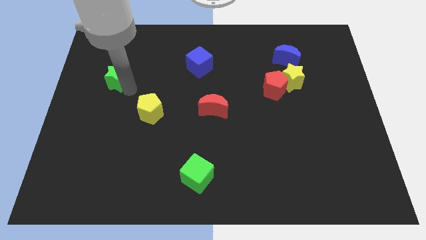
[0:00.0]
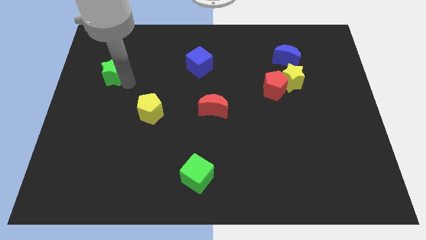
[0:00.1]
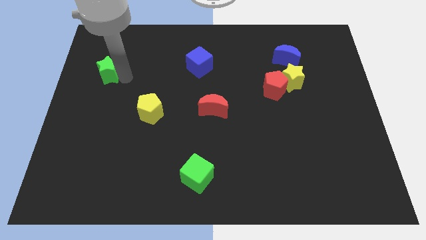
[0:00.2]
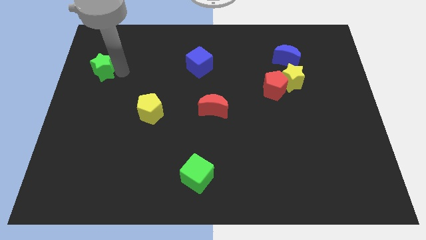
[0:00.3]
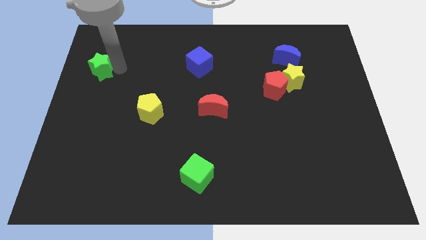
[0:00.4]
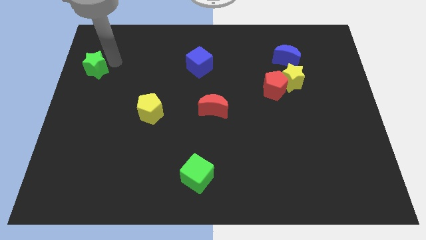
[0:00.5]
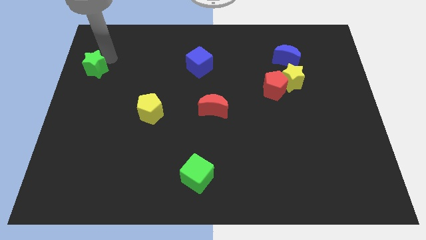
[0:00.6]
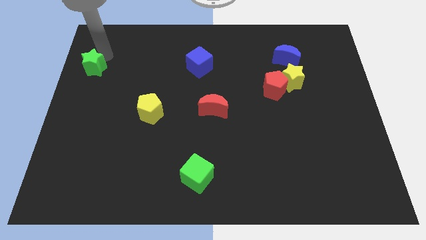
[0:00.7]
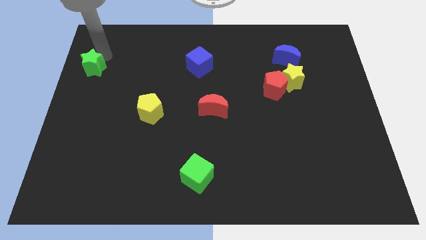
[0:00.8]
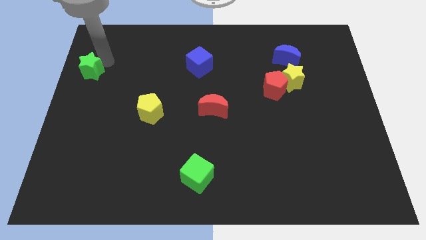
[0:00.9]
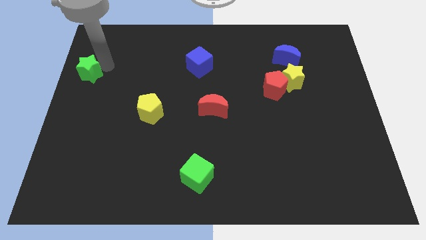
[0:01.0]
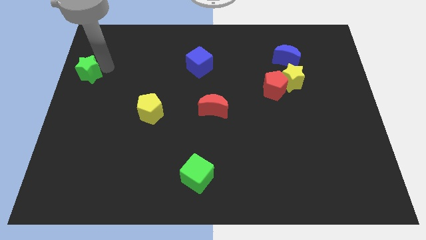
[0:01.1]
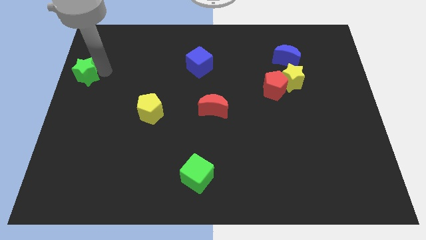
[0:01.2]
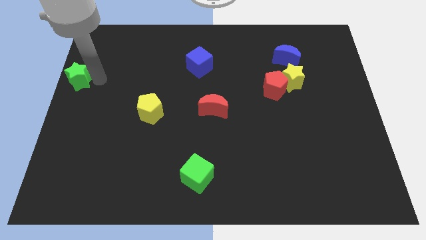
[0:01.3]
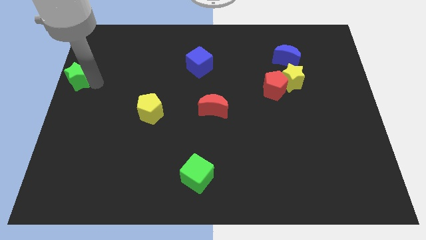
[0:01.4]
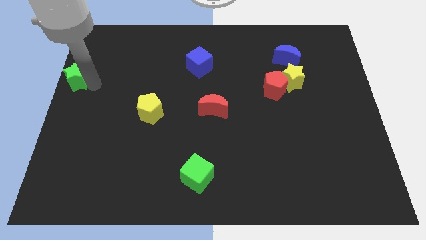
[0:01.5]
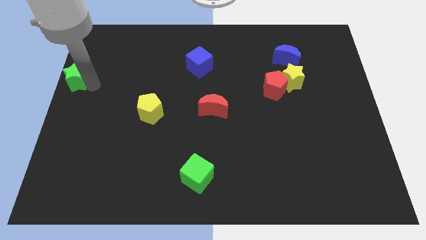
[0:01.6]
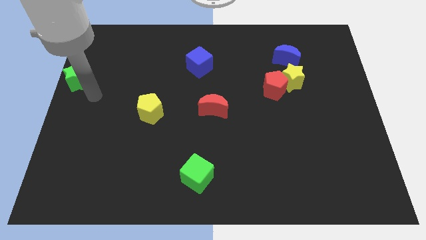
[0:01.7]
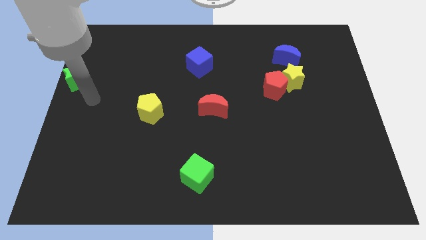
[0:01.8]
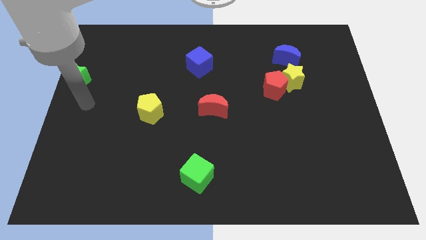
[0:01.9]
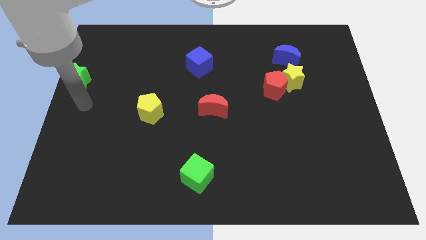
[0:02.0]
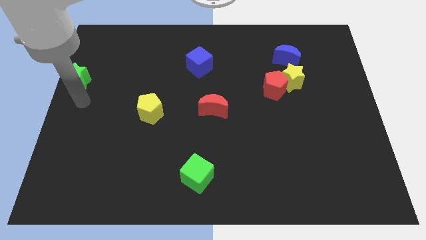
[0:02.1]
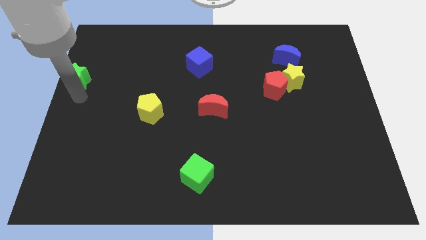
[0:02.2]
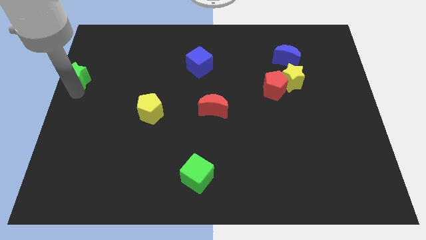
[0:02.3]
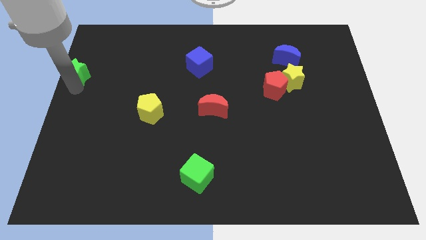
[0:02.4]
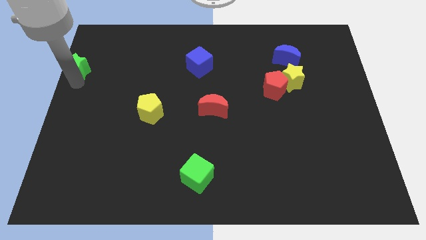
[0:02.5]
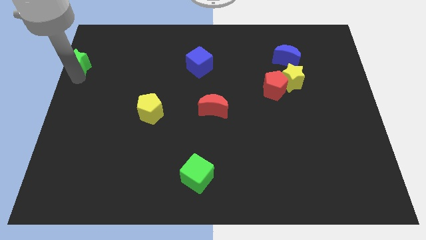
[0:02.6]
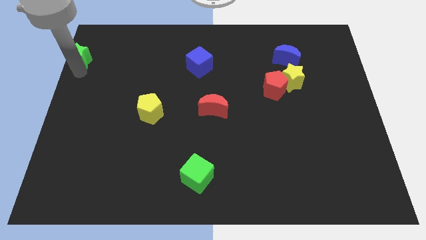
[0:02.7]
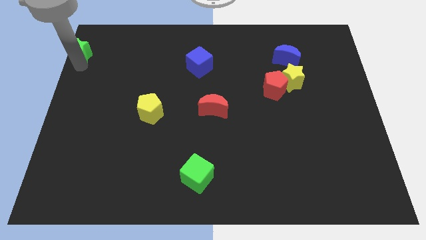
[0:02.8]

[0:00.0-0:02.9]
move green star towards the top of the board

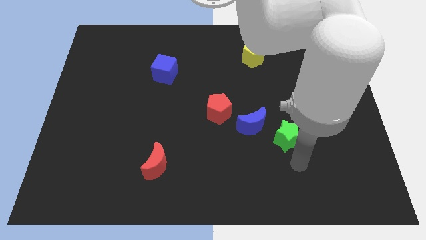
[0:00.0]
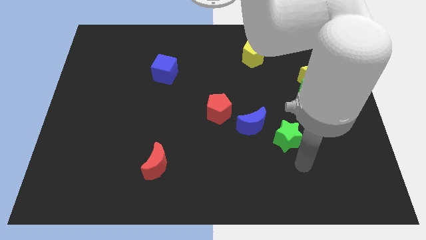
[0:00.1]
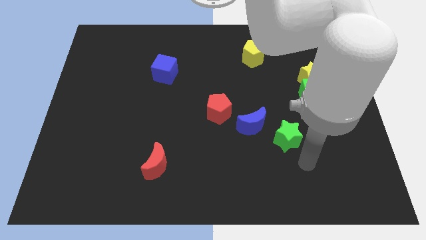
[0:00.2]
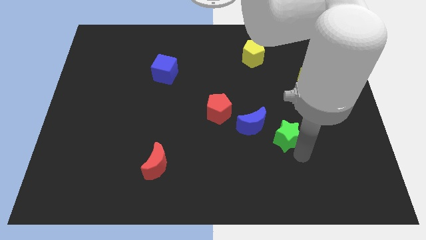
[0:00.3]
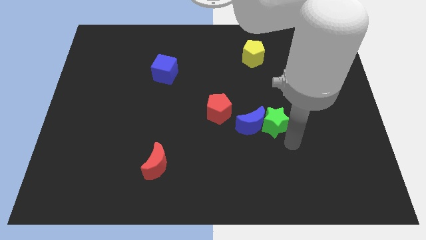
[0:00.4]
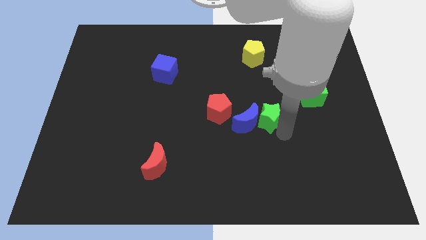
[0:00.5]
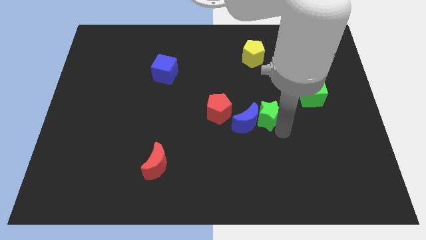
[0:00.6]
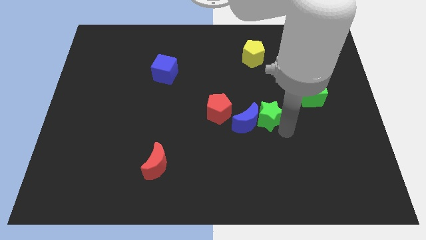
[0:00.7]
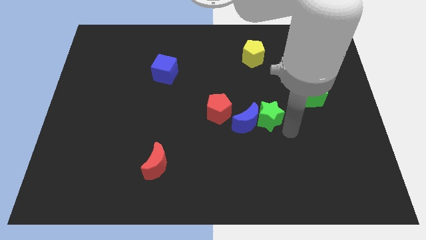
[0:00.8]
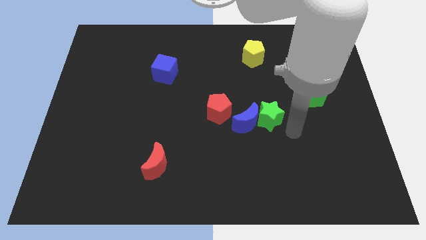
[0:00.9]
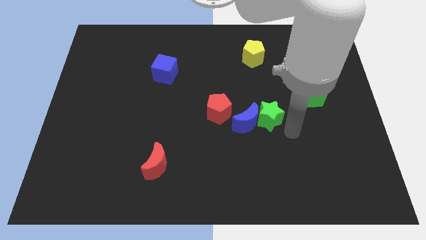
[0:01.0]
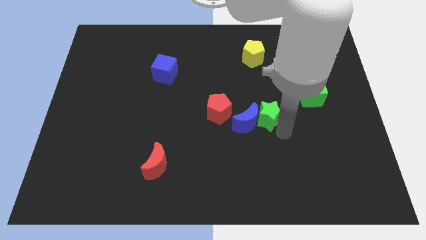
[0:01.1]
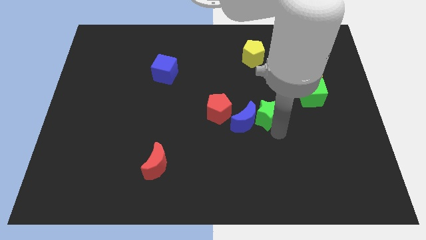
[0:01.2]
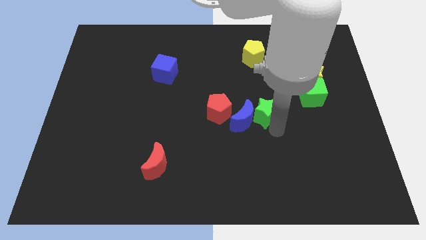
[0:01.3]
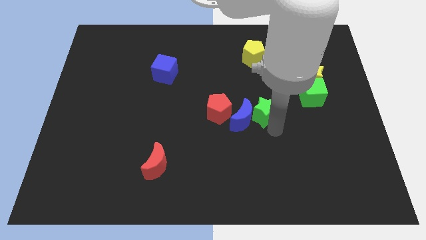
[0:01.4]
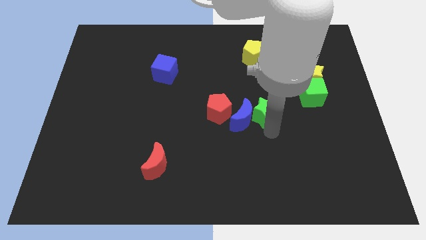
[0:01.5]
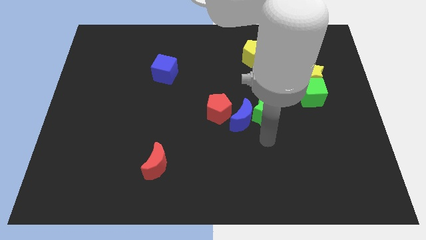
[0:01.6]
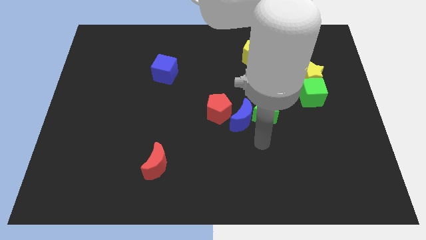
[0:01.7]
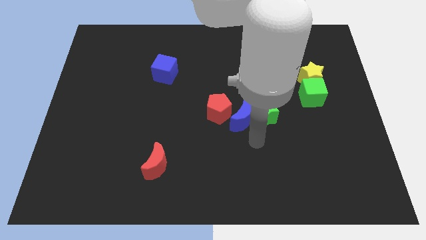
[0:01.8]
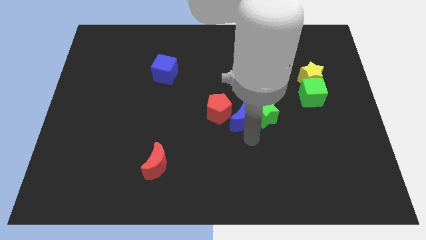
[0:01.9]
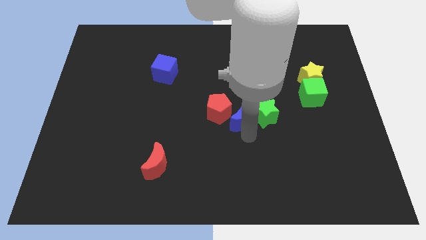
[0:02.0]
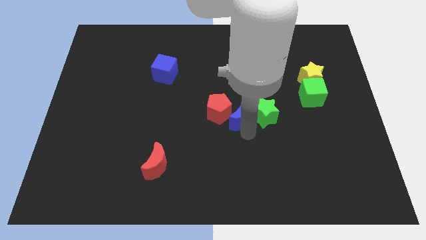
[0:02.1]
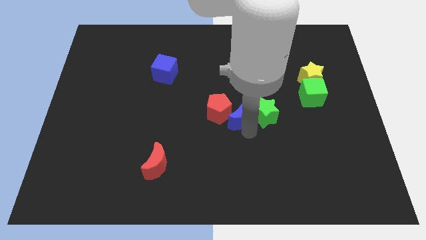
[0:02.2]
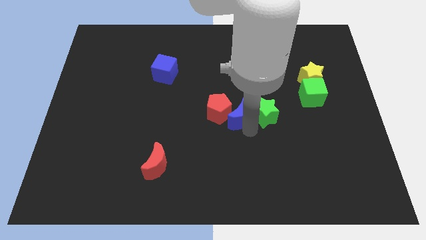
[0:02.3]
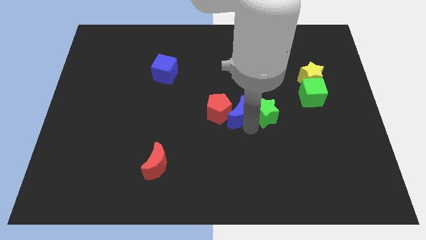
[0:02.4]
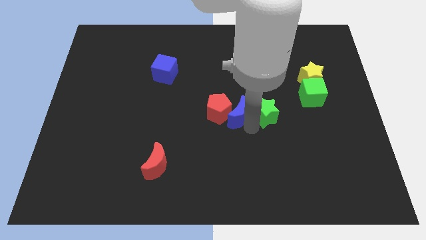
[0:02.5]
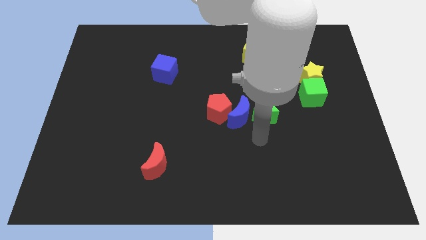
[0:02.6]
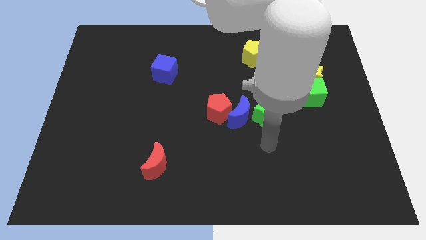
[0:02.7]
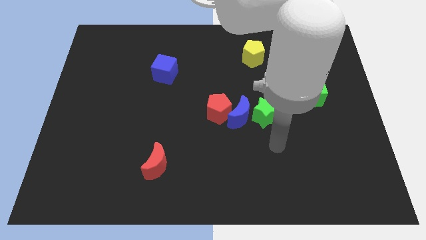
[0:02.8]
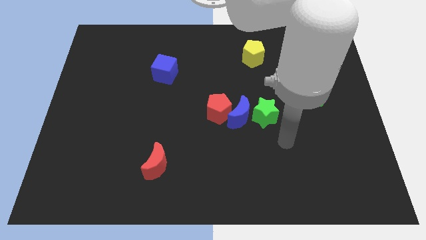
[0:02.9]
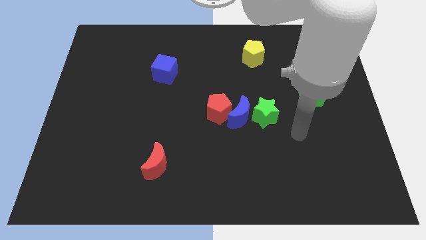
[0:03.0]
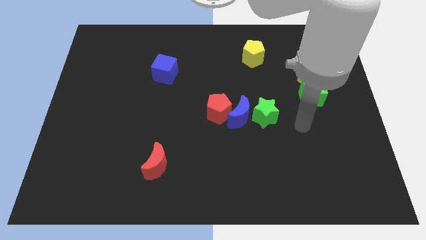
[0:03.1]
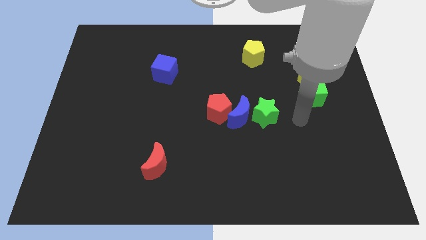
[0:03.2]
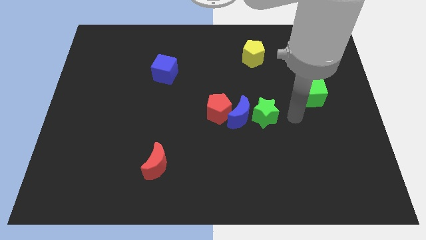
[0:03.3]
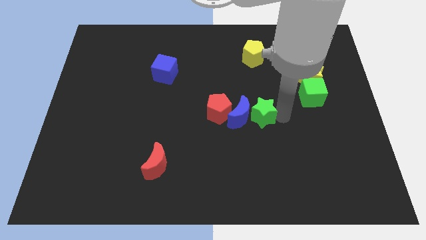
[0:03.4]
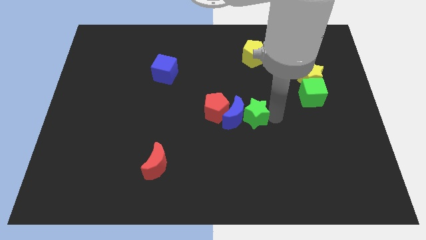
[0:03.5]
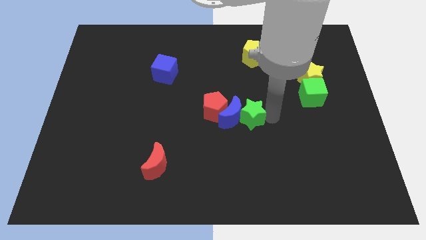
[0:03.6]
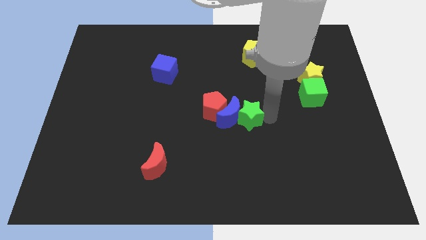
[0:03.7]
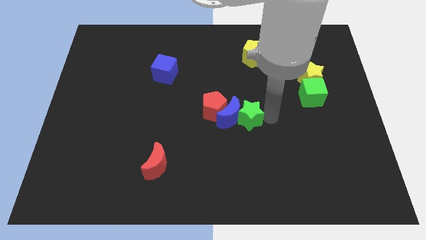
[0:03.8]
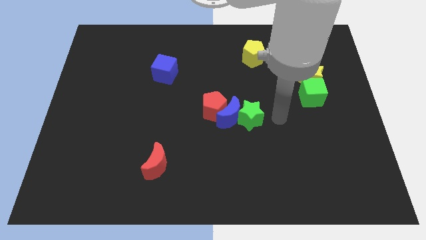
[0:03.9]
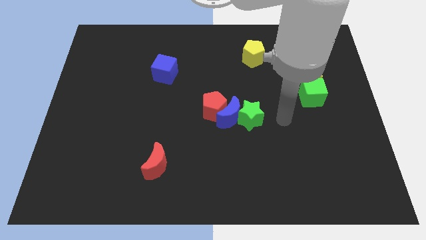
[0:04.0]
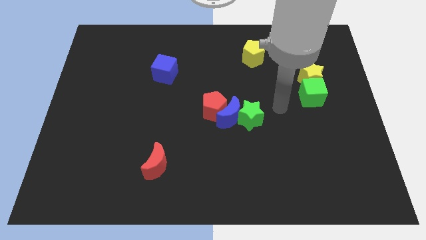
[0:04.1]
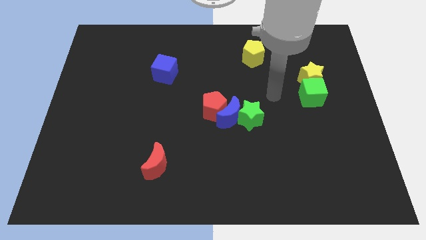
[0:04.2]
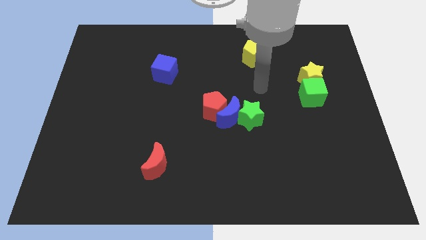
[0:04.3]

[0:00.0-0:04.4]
push the blue crescent into the red pentagon

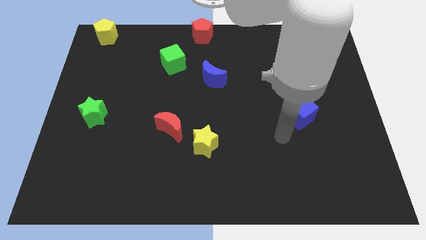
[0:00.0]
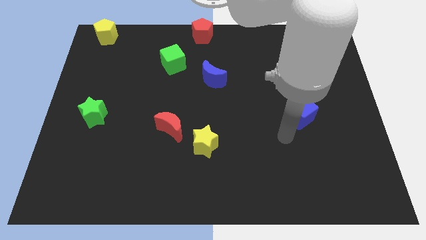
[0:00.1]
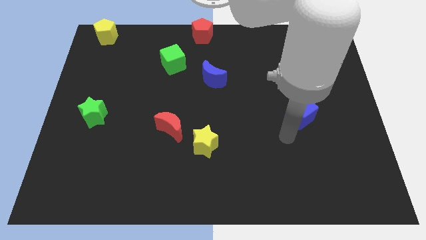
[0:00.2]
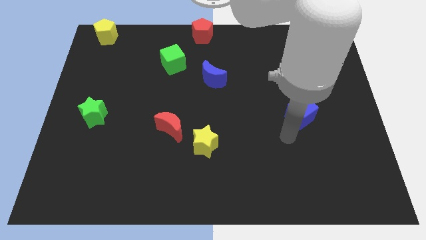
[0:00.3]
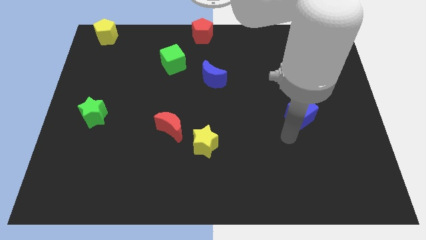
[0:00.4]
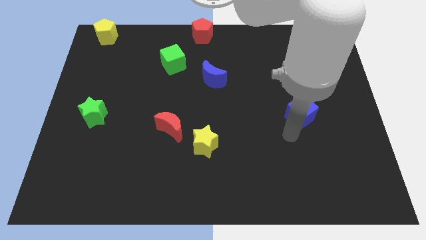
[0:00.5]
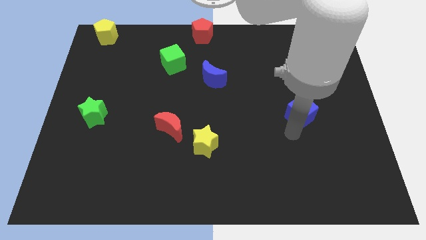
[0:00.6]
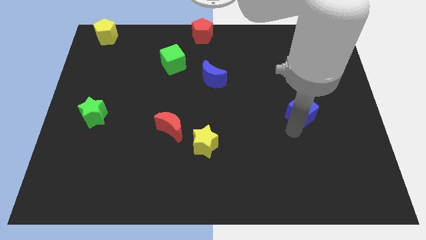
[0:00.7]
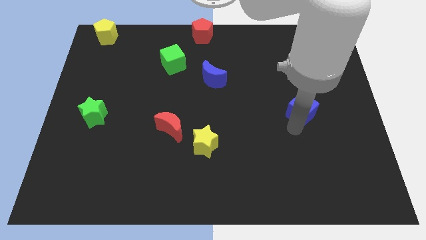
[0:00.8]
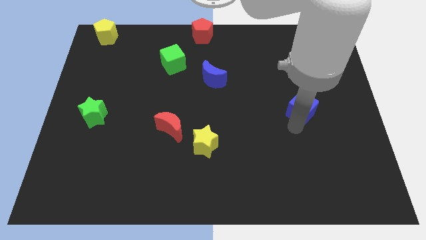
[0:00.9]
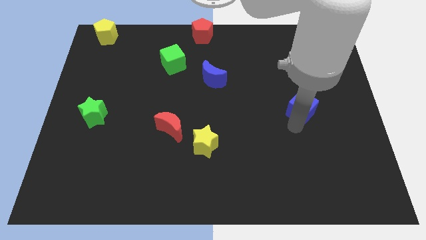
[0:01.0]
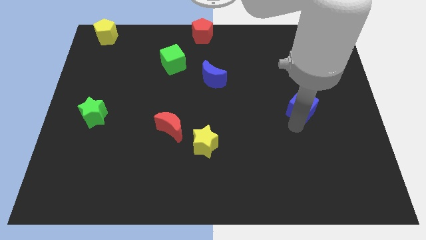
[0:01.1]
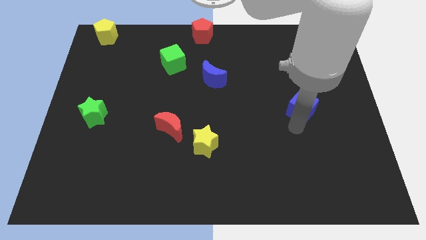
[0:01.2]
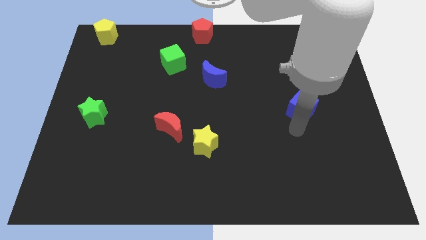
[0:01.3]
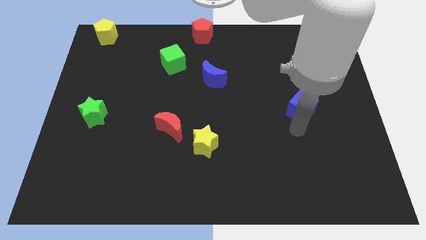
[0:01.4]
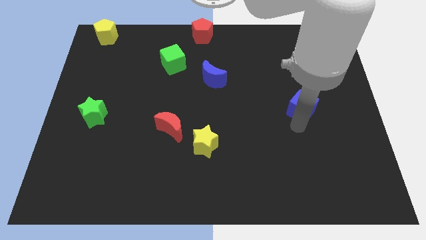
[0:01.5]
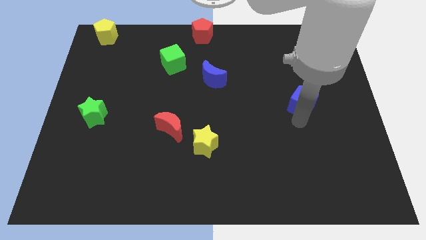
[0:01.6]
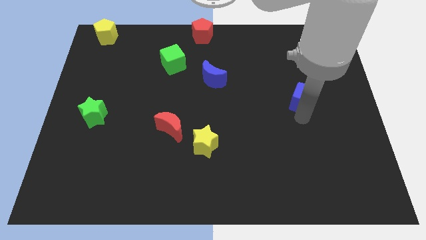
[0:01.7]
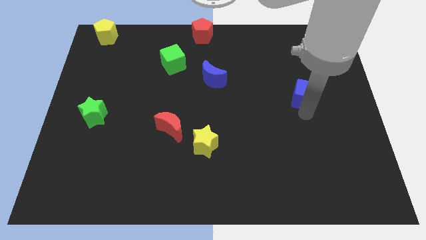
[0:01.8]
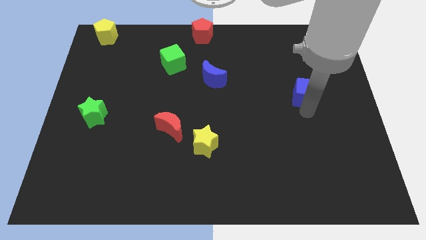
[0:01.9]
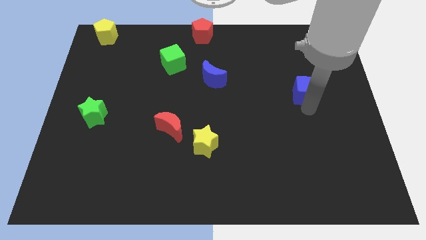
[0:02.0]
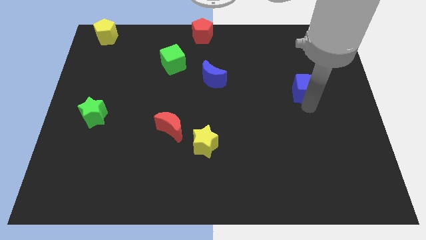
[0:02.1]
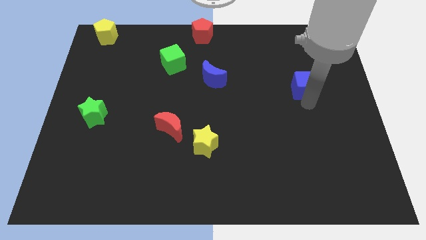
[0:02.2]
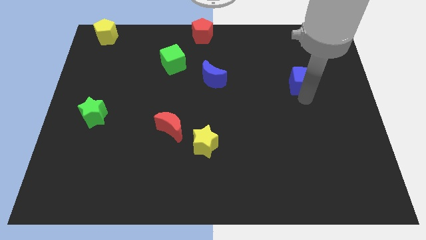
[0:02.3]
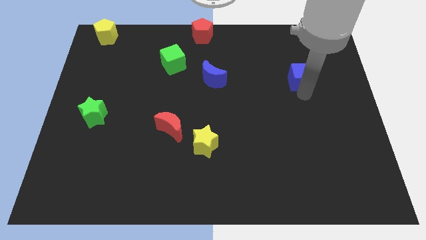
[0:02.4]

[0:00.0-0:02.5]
move the blue cube towards top
